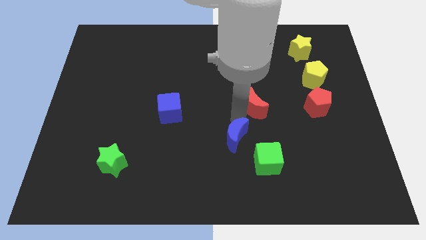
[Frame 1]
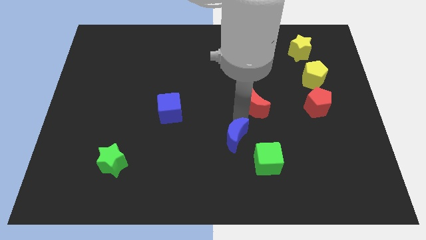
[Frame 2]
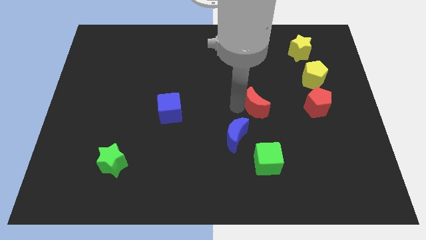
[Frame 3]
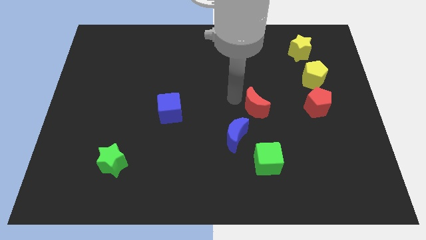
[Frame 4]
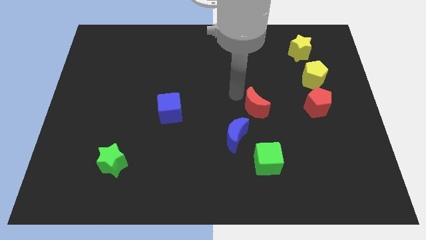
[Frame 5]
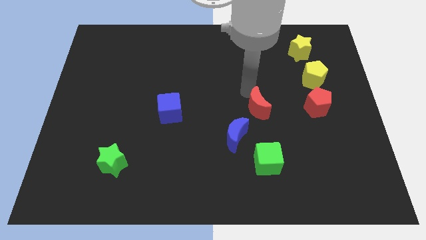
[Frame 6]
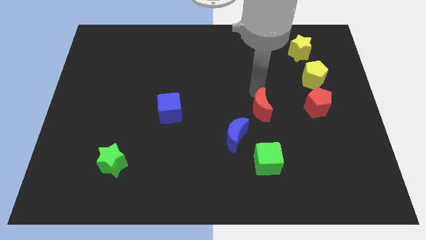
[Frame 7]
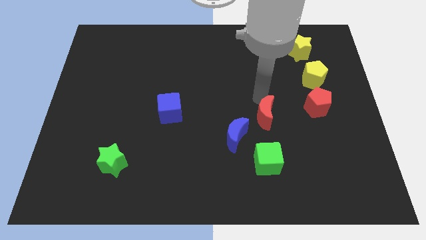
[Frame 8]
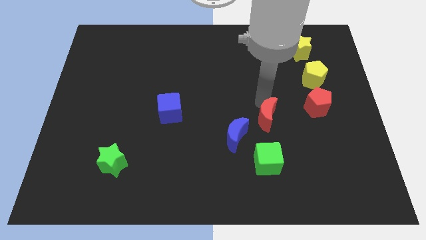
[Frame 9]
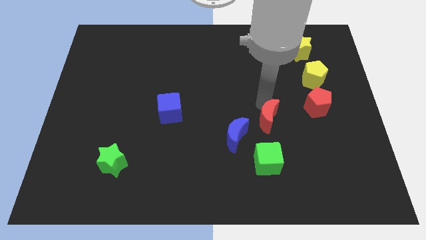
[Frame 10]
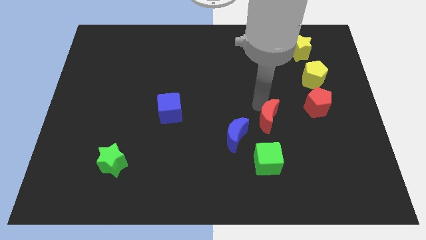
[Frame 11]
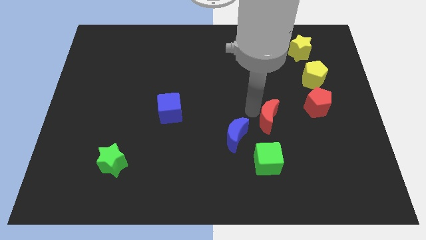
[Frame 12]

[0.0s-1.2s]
push red crescent above green cube

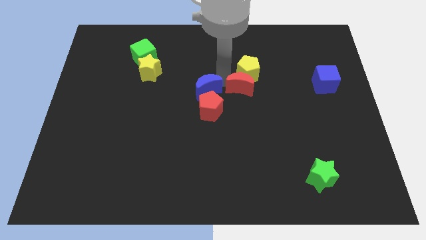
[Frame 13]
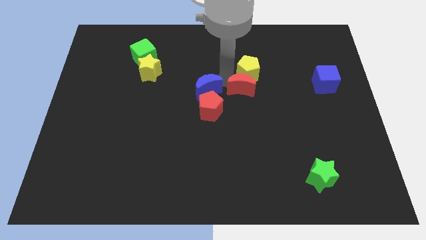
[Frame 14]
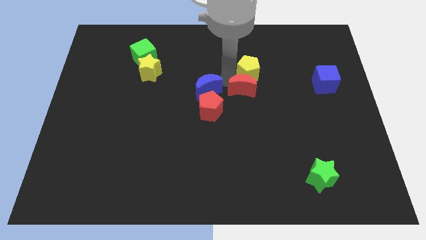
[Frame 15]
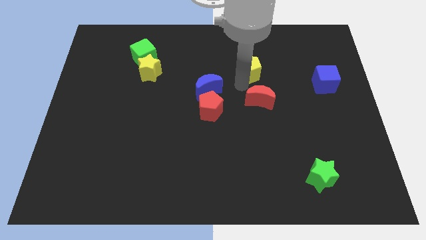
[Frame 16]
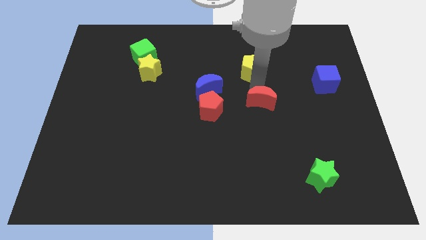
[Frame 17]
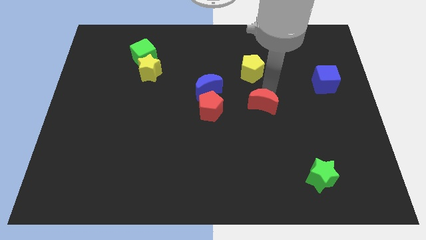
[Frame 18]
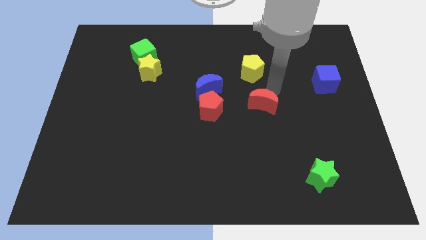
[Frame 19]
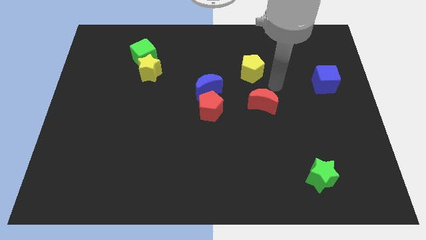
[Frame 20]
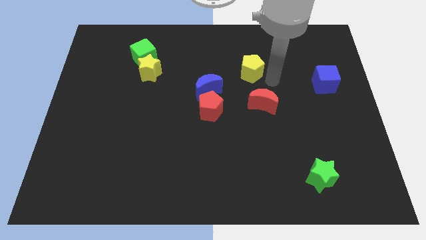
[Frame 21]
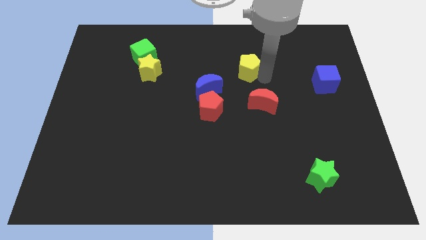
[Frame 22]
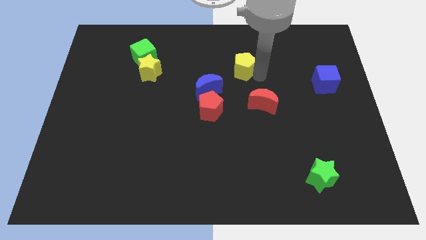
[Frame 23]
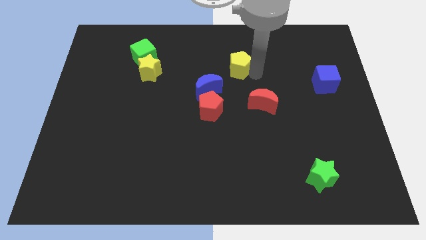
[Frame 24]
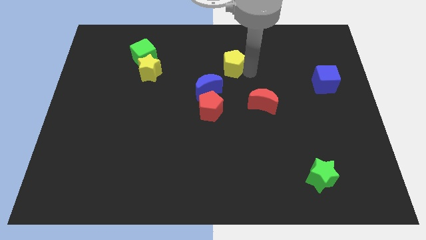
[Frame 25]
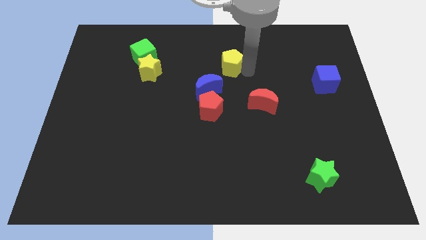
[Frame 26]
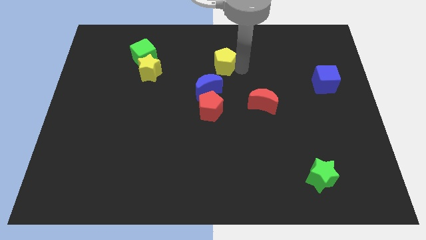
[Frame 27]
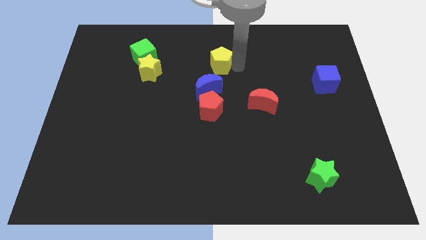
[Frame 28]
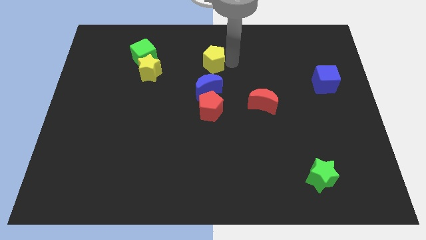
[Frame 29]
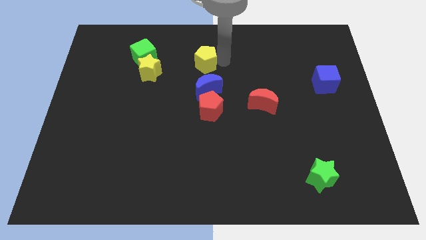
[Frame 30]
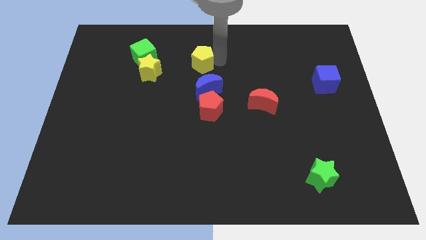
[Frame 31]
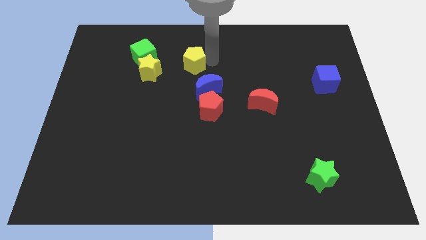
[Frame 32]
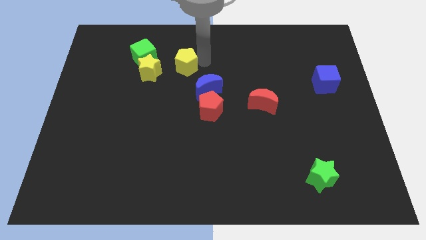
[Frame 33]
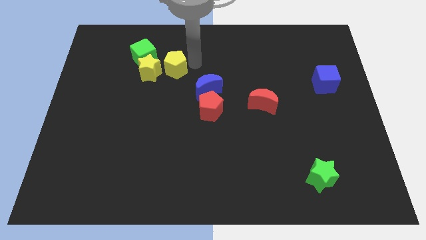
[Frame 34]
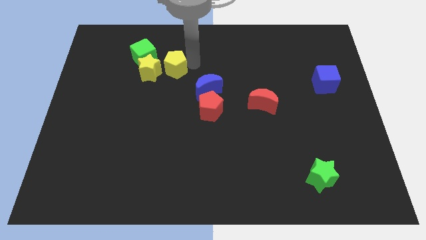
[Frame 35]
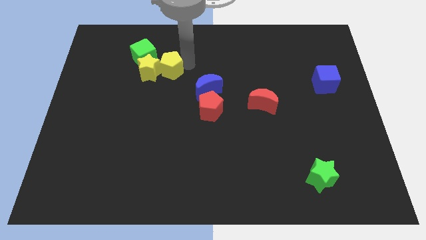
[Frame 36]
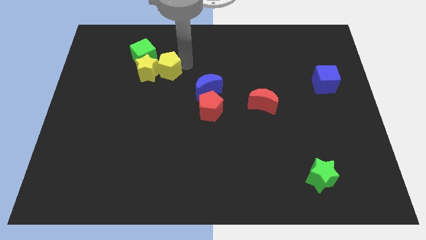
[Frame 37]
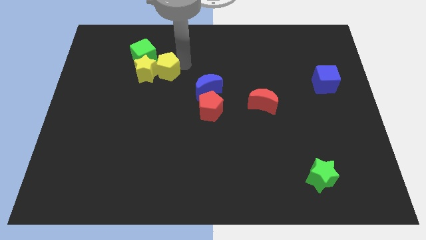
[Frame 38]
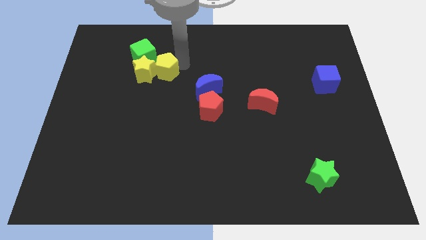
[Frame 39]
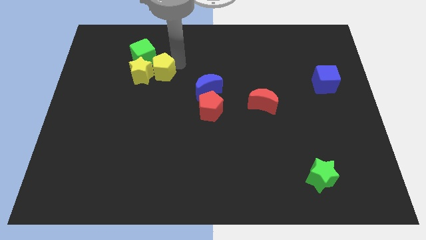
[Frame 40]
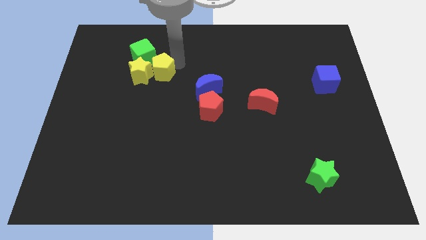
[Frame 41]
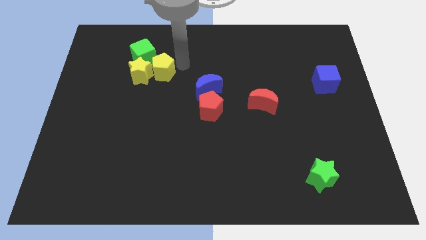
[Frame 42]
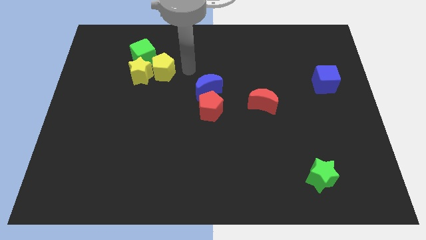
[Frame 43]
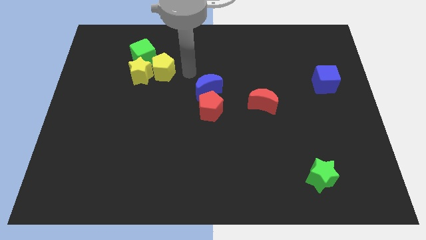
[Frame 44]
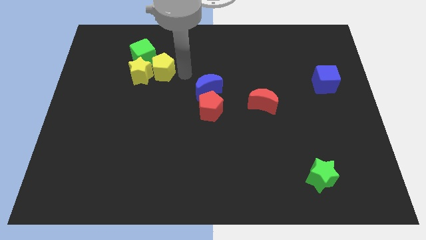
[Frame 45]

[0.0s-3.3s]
separate the yellow pentagon from the red crescent

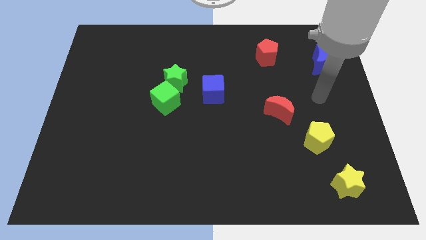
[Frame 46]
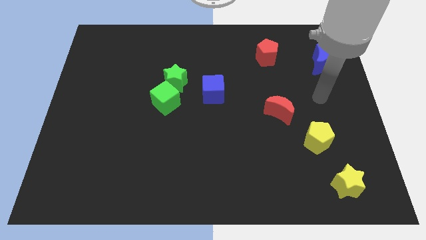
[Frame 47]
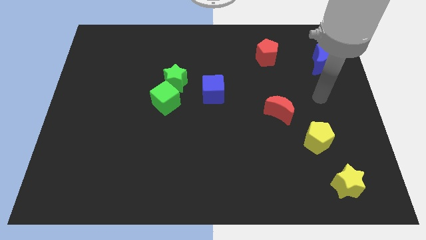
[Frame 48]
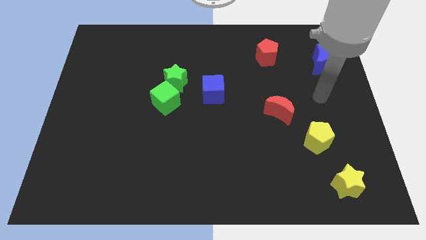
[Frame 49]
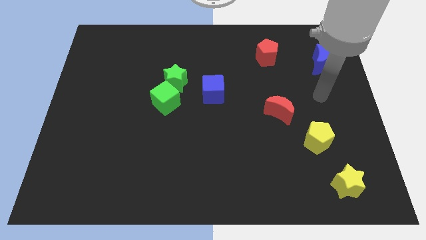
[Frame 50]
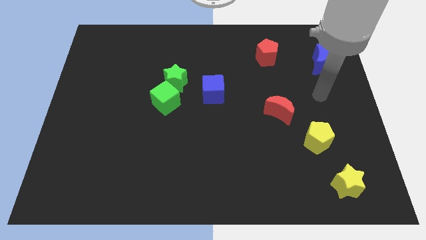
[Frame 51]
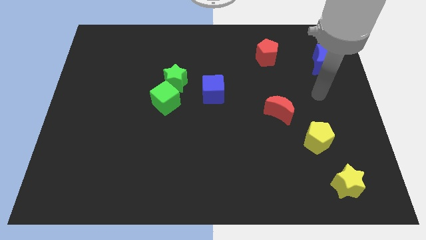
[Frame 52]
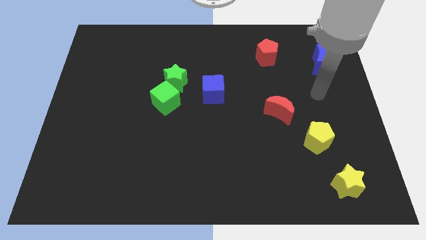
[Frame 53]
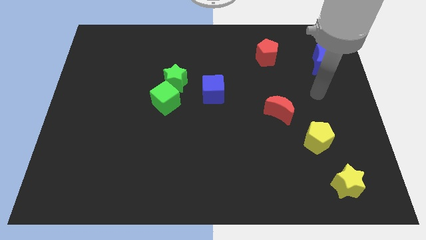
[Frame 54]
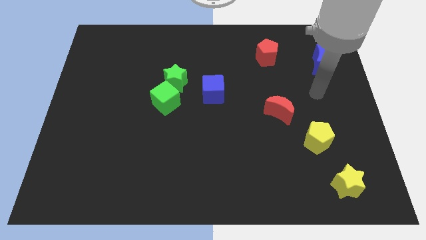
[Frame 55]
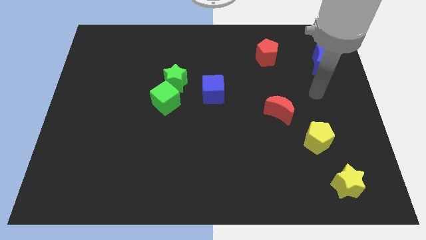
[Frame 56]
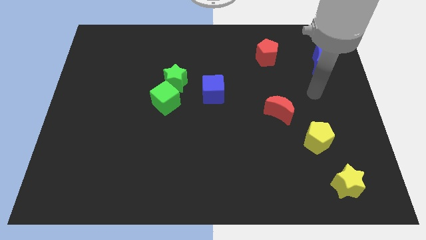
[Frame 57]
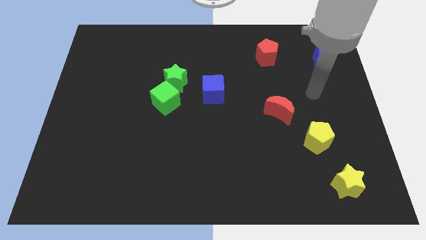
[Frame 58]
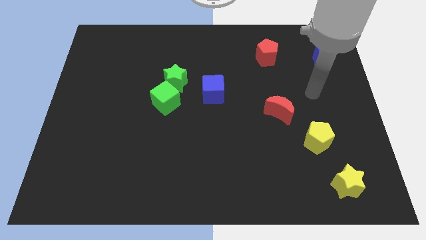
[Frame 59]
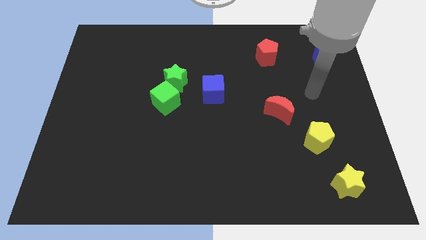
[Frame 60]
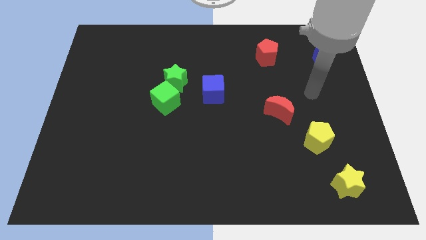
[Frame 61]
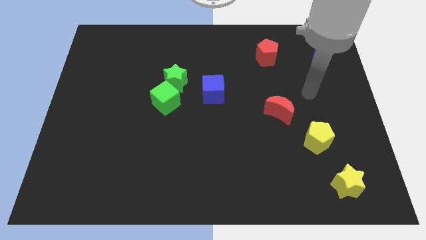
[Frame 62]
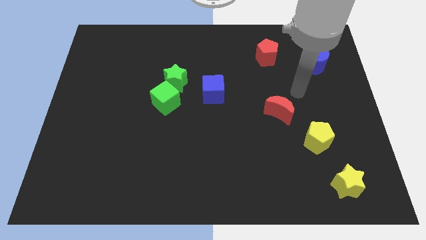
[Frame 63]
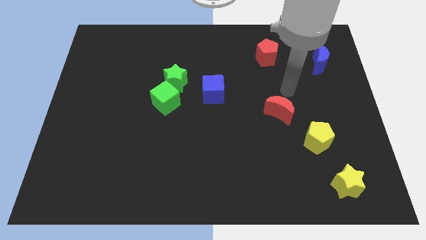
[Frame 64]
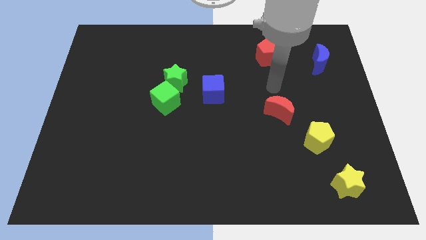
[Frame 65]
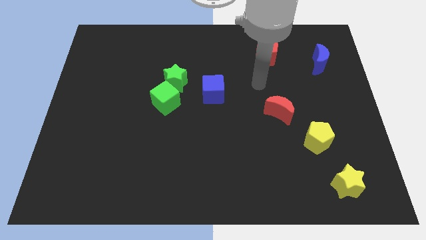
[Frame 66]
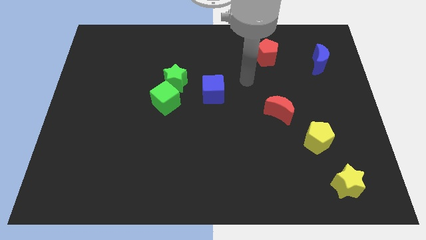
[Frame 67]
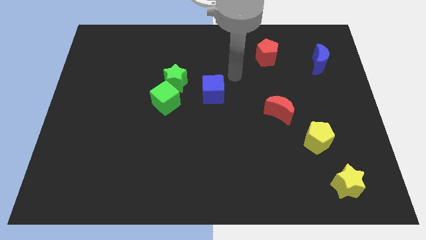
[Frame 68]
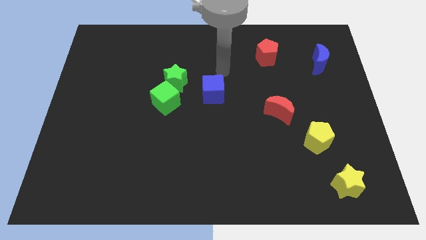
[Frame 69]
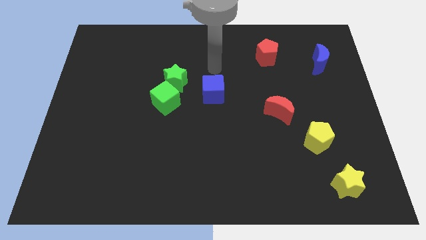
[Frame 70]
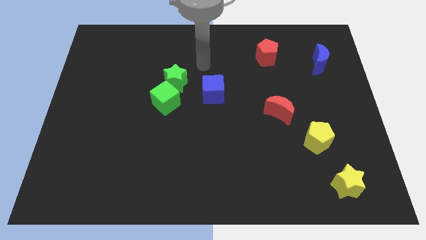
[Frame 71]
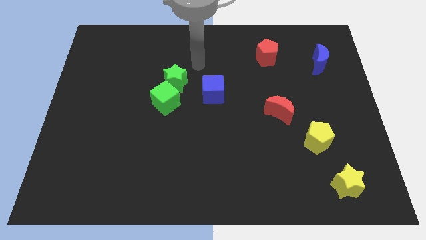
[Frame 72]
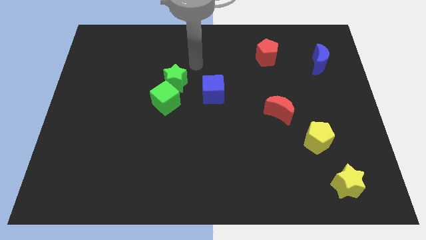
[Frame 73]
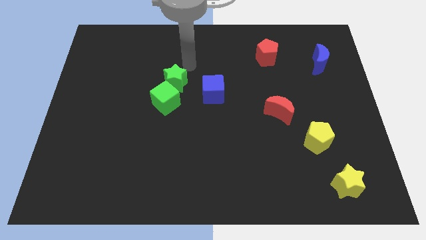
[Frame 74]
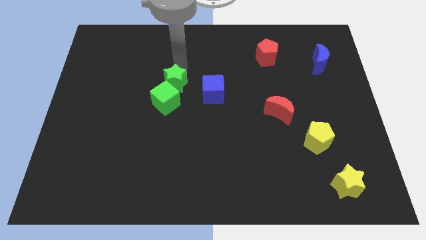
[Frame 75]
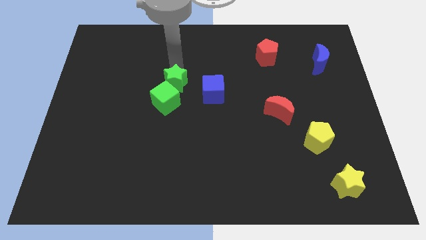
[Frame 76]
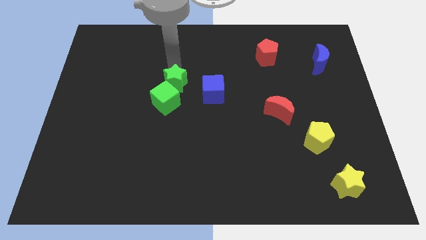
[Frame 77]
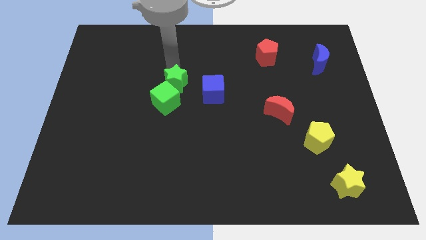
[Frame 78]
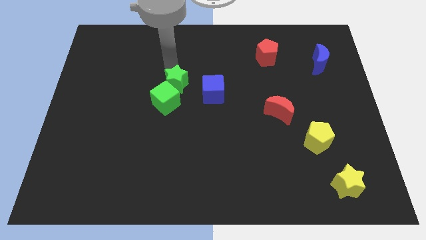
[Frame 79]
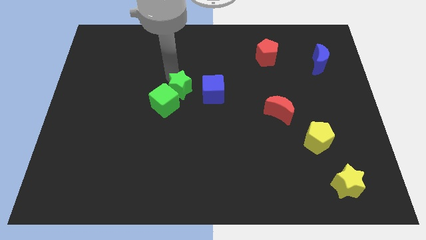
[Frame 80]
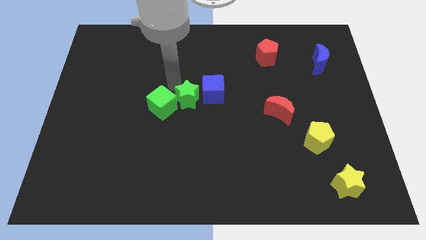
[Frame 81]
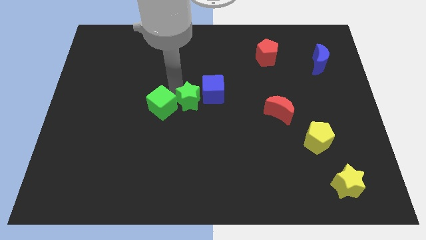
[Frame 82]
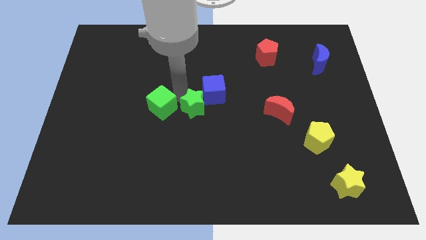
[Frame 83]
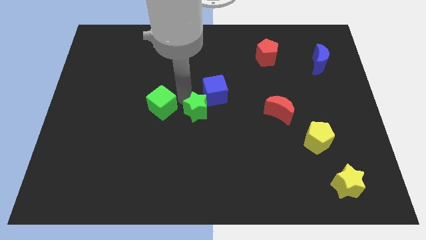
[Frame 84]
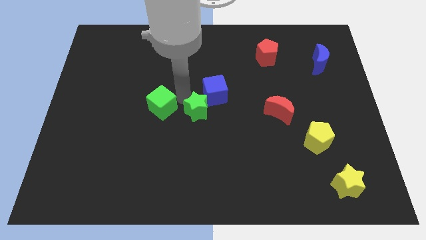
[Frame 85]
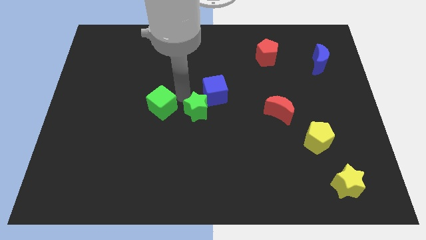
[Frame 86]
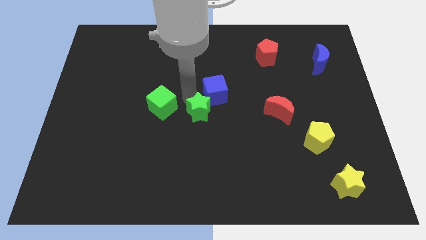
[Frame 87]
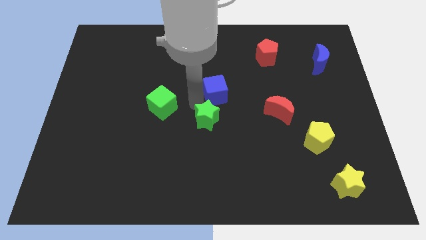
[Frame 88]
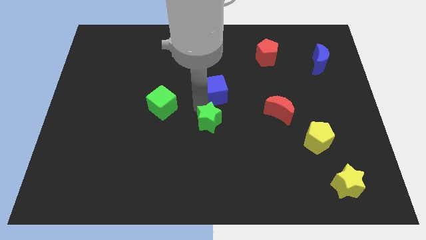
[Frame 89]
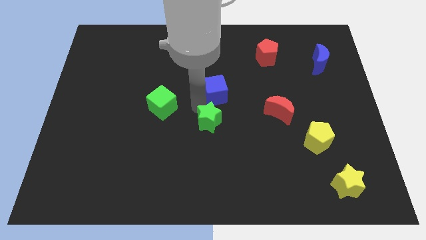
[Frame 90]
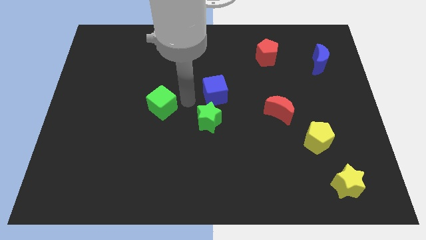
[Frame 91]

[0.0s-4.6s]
push the green star into the green cube
